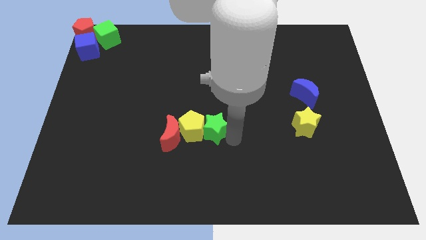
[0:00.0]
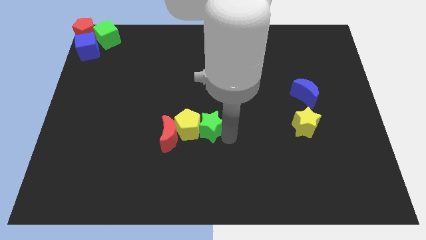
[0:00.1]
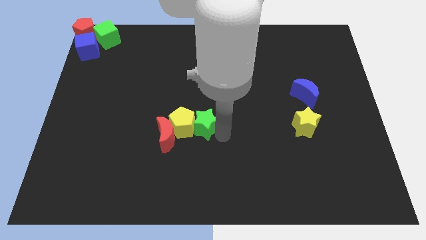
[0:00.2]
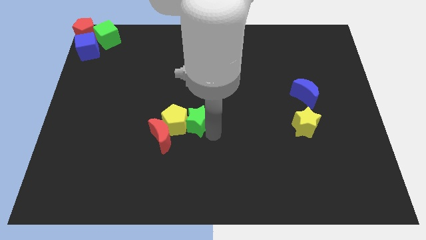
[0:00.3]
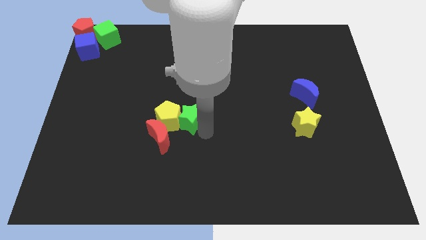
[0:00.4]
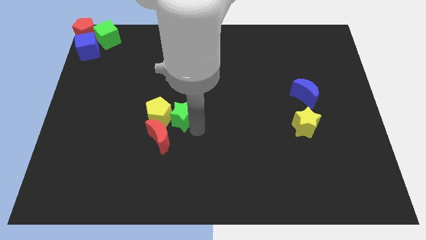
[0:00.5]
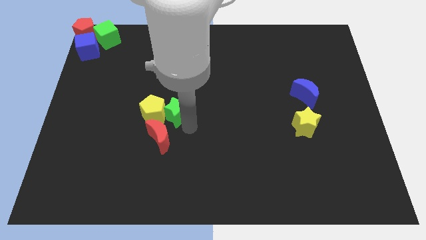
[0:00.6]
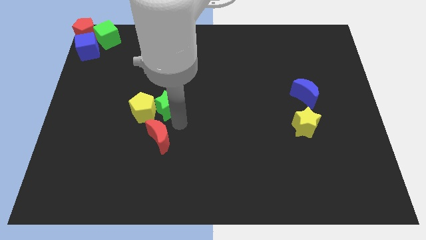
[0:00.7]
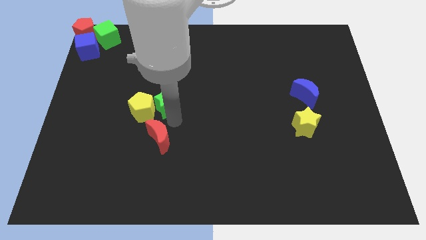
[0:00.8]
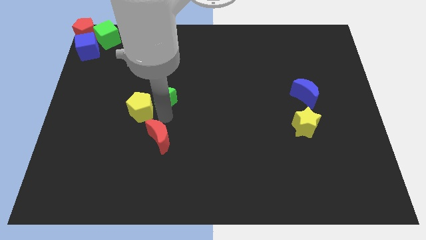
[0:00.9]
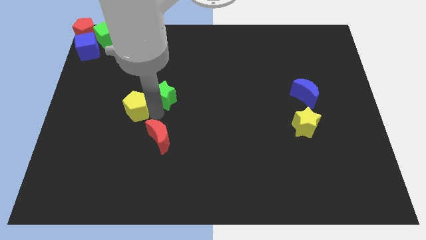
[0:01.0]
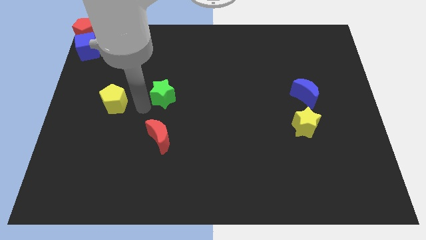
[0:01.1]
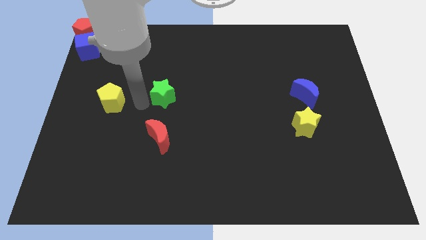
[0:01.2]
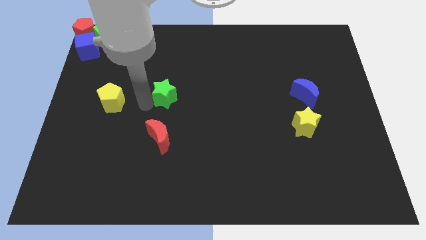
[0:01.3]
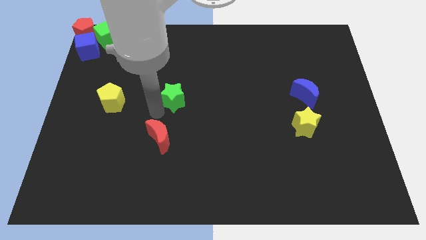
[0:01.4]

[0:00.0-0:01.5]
separate the yellow pentagon and the green star

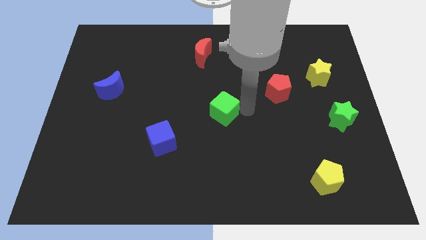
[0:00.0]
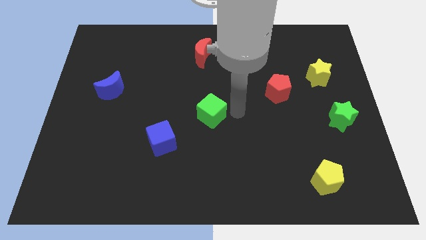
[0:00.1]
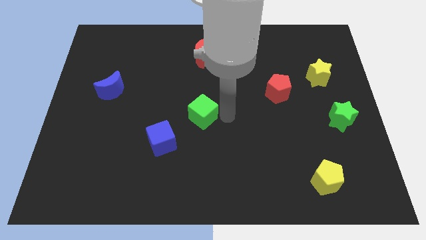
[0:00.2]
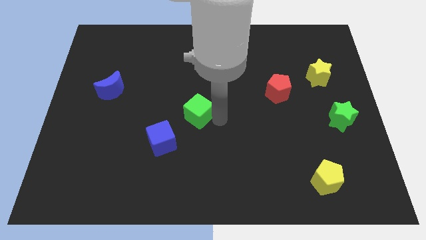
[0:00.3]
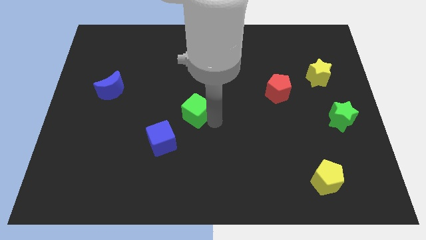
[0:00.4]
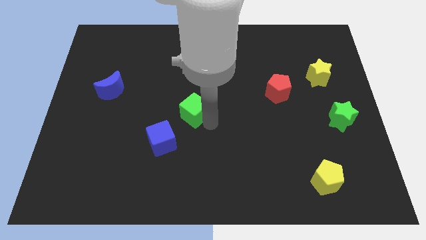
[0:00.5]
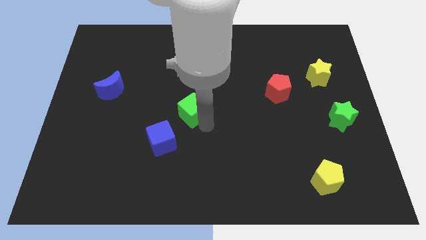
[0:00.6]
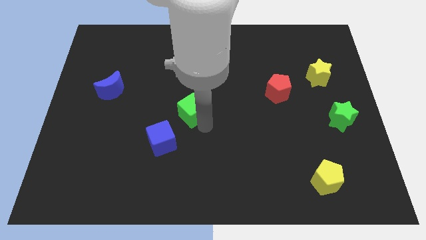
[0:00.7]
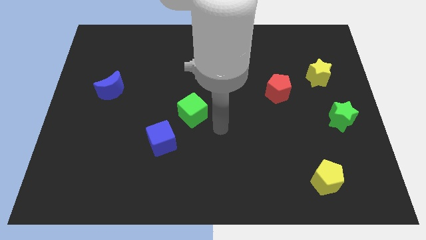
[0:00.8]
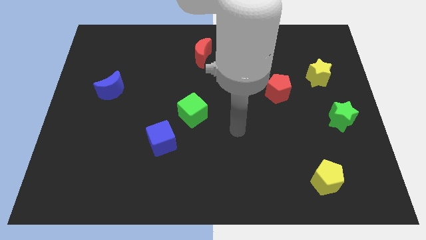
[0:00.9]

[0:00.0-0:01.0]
push the green cube towards blue cube

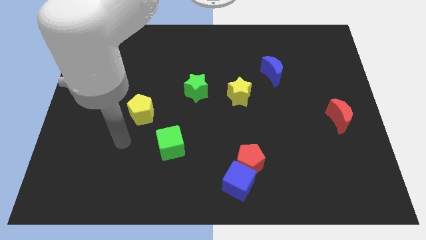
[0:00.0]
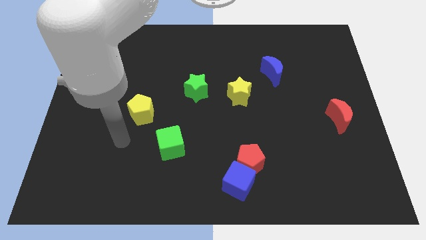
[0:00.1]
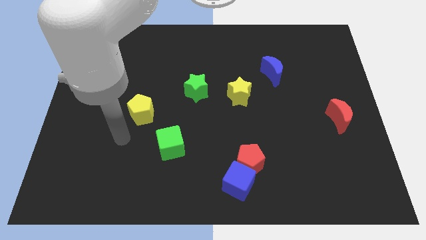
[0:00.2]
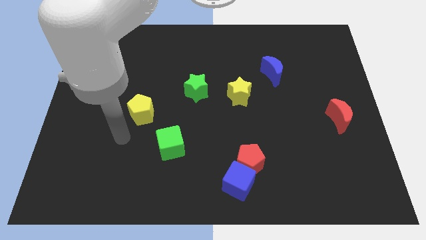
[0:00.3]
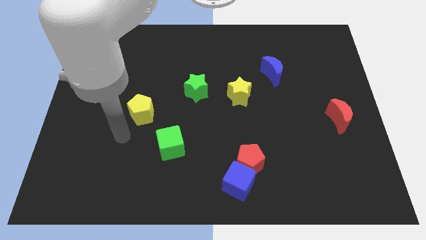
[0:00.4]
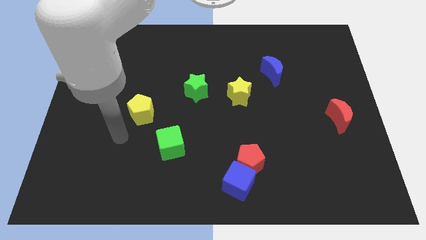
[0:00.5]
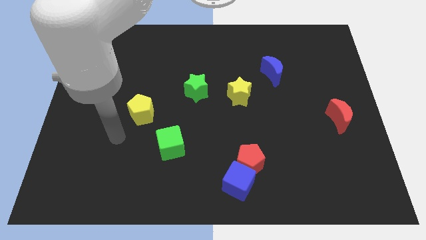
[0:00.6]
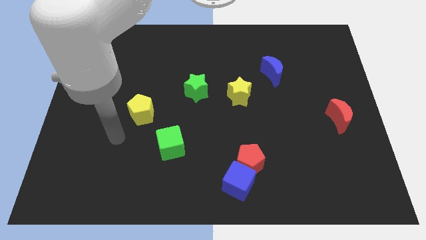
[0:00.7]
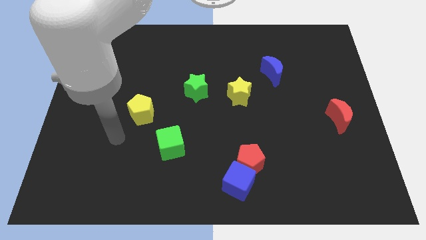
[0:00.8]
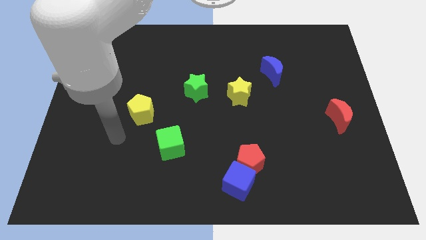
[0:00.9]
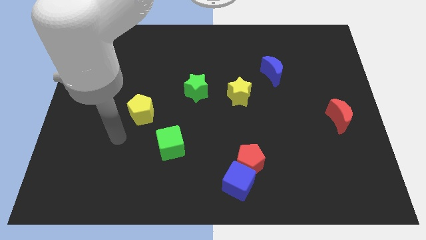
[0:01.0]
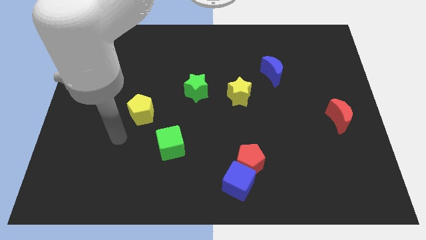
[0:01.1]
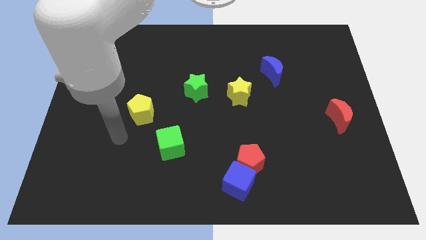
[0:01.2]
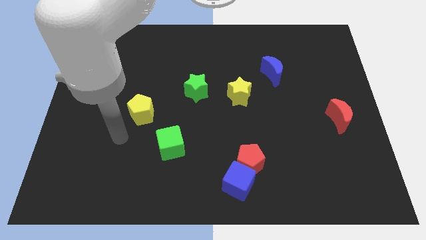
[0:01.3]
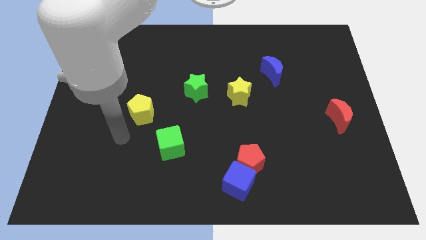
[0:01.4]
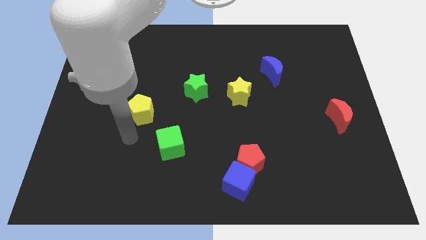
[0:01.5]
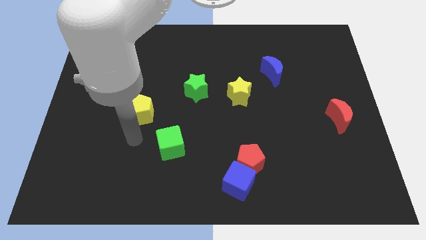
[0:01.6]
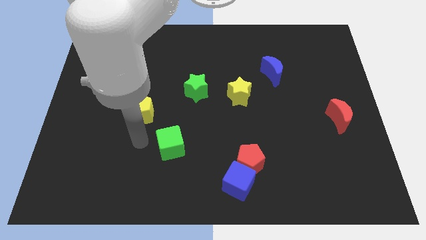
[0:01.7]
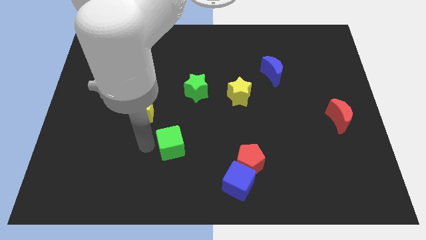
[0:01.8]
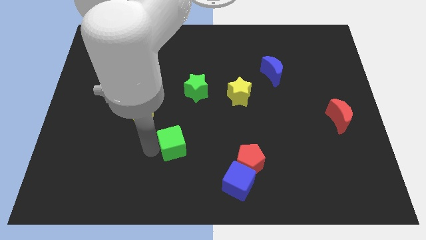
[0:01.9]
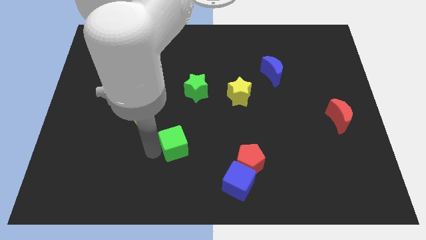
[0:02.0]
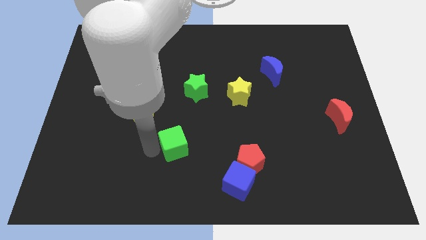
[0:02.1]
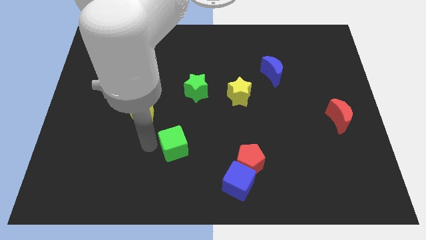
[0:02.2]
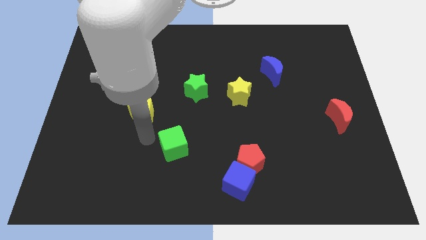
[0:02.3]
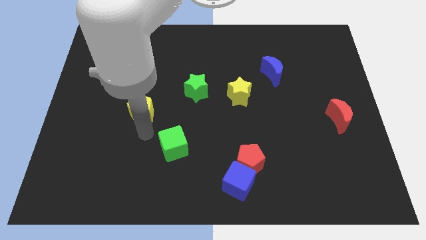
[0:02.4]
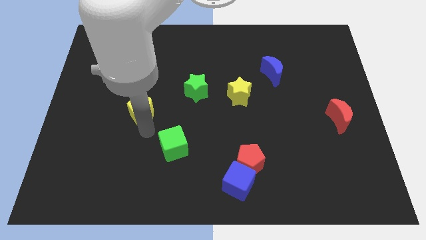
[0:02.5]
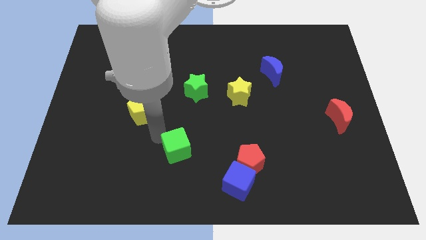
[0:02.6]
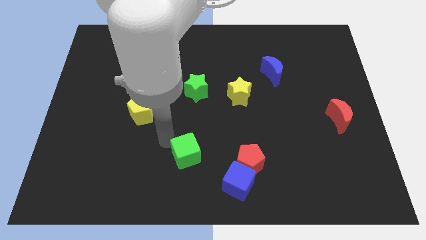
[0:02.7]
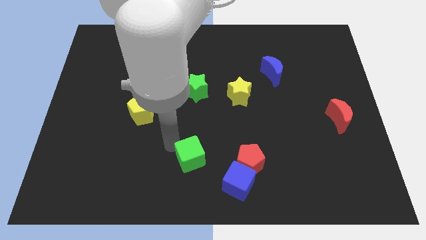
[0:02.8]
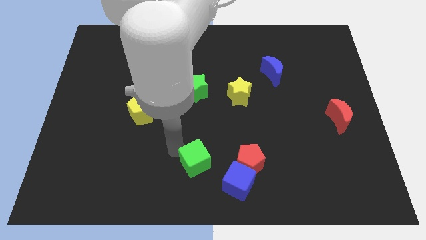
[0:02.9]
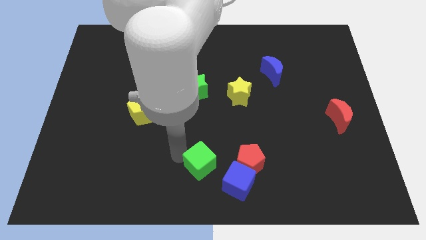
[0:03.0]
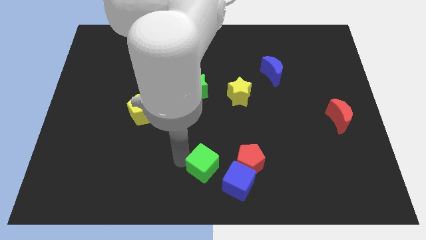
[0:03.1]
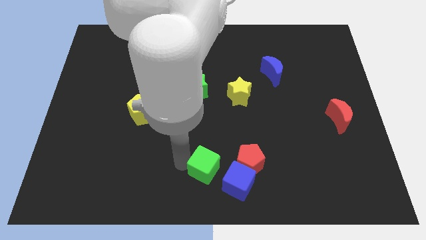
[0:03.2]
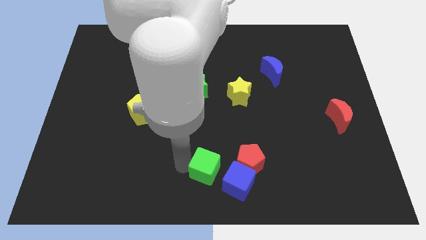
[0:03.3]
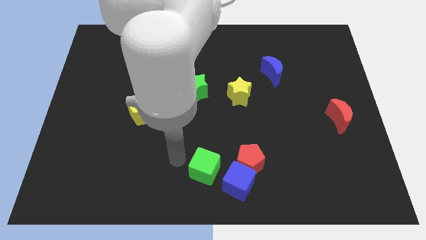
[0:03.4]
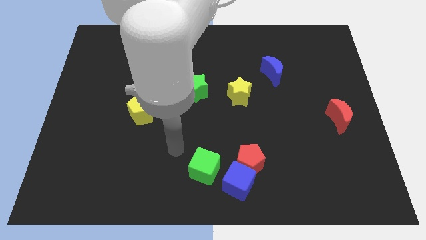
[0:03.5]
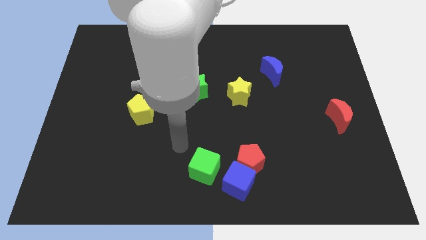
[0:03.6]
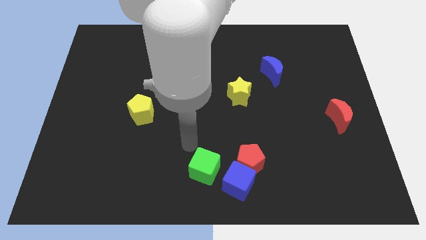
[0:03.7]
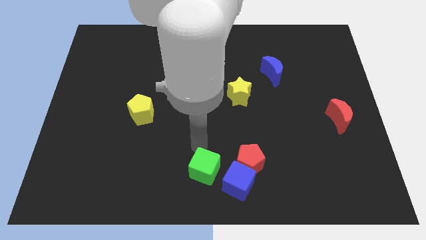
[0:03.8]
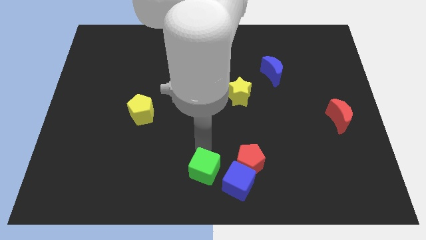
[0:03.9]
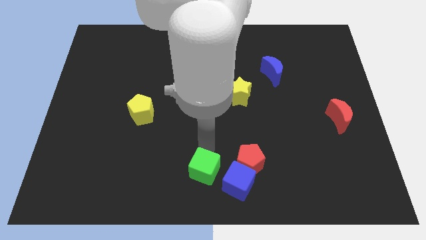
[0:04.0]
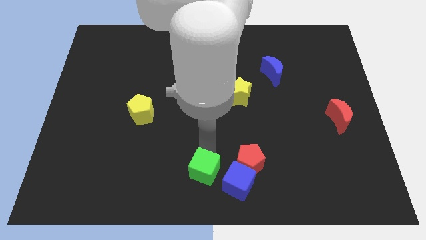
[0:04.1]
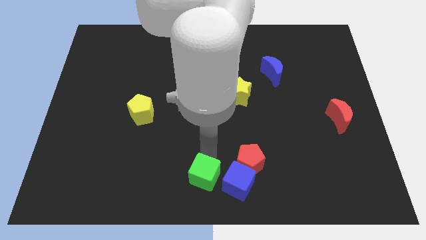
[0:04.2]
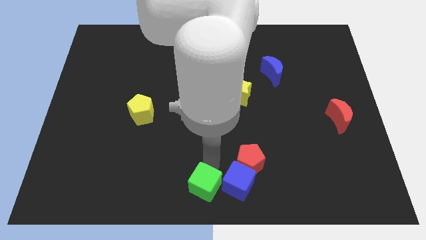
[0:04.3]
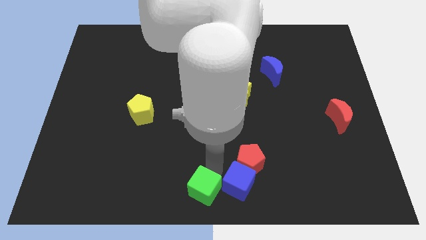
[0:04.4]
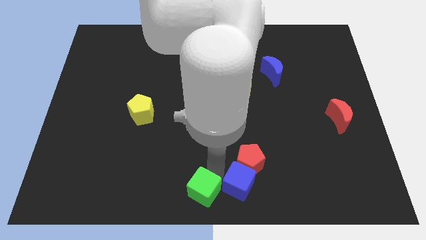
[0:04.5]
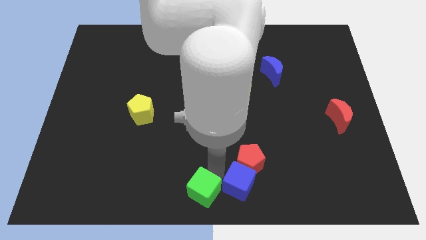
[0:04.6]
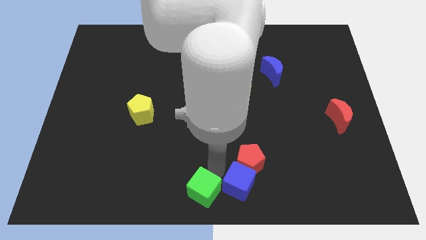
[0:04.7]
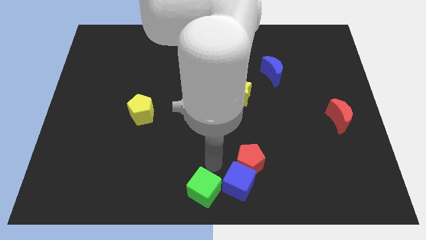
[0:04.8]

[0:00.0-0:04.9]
move the green cube to the left side of the blue cube

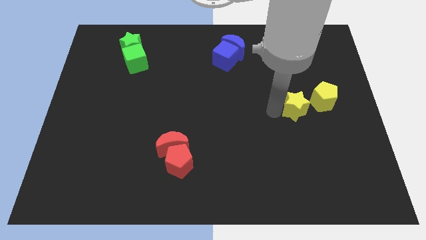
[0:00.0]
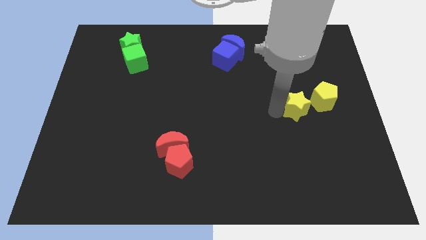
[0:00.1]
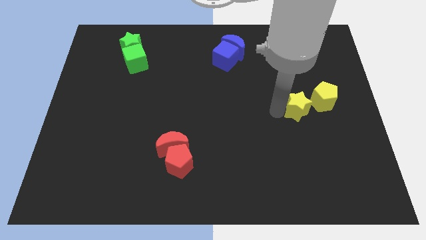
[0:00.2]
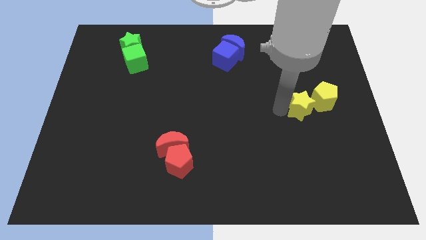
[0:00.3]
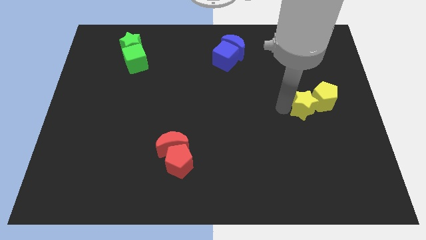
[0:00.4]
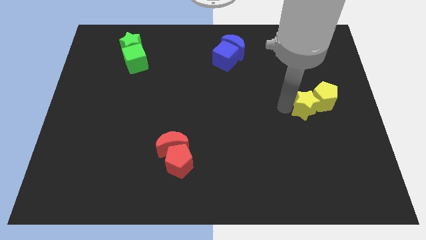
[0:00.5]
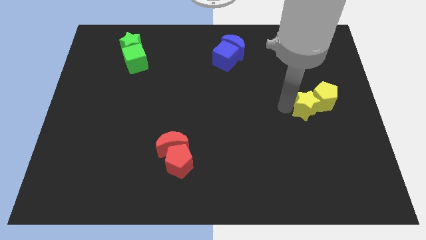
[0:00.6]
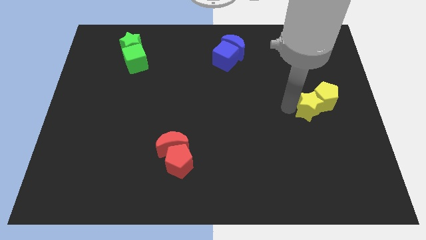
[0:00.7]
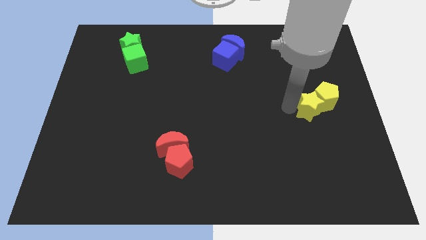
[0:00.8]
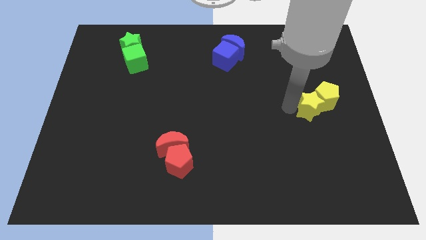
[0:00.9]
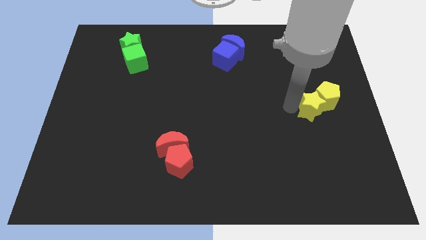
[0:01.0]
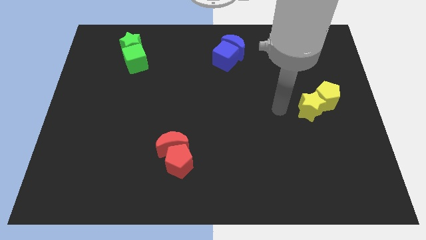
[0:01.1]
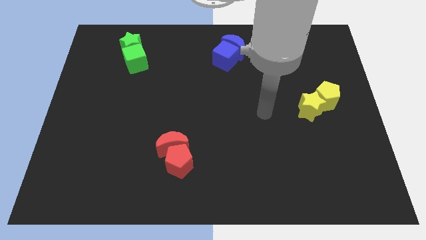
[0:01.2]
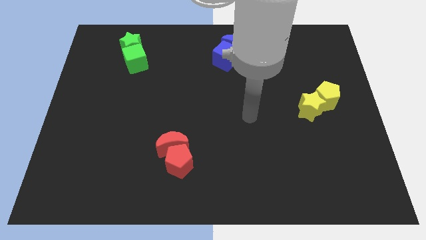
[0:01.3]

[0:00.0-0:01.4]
group up the yellow blocks at the center right of the board

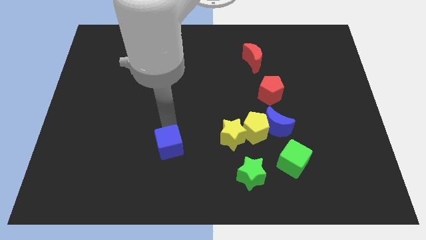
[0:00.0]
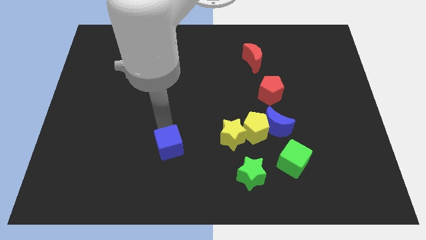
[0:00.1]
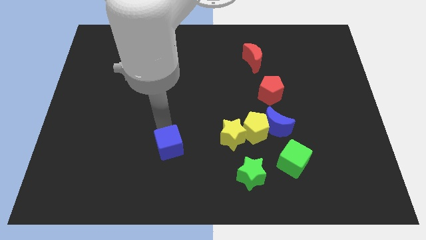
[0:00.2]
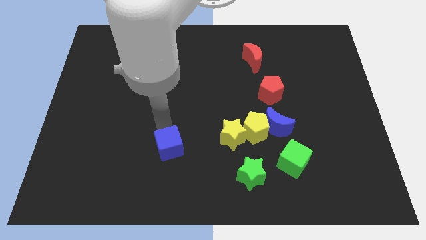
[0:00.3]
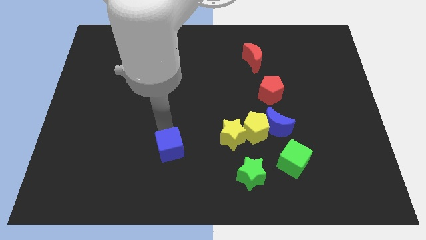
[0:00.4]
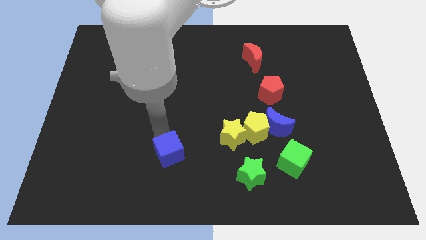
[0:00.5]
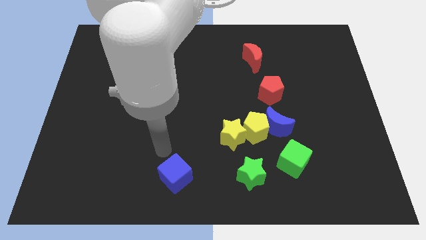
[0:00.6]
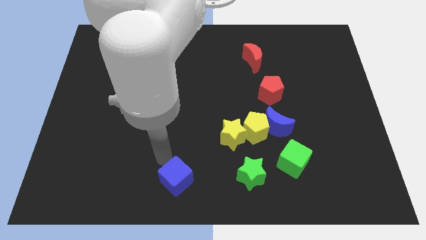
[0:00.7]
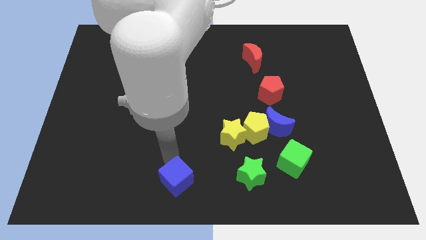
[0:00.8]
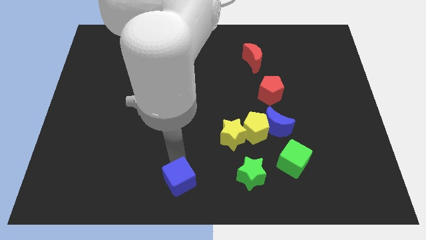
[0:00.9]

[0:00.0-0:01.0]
place the blue cube parallel to the green star
